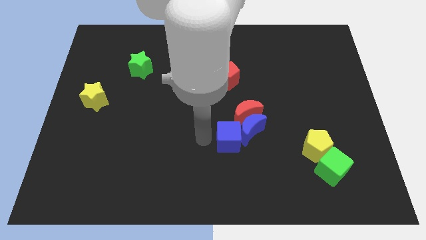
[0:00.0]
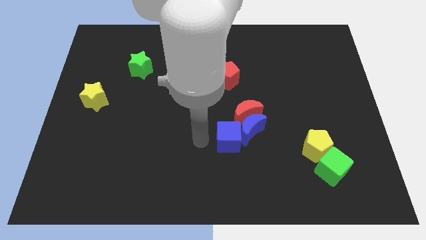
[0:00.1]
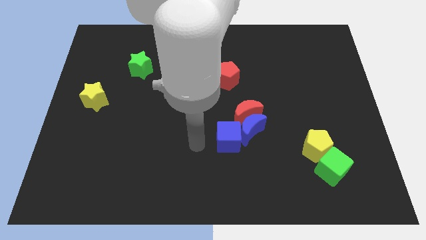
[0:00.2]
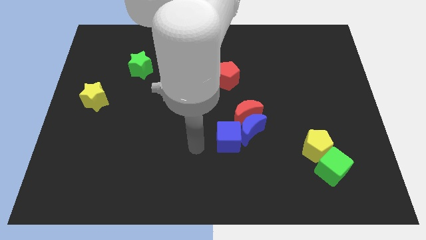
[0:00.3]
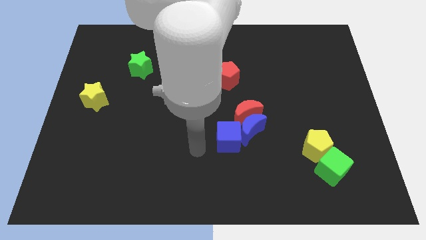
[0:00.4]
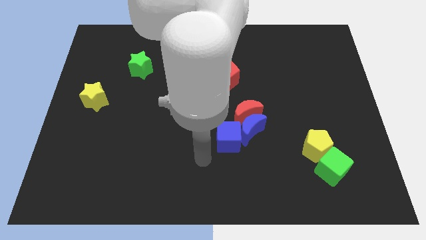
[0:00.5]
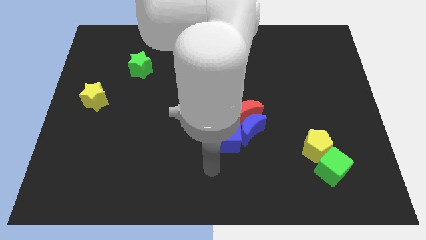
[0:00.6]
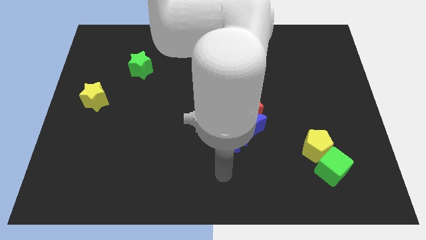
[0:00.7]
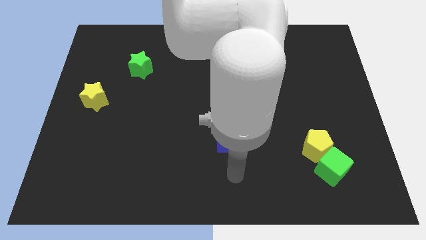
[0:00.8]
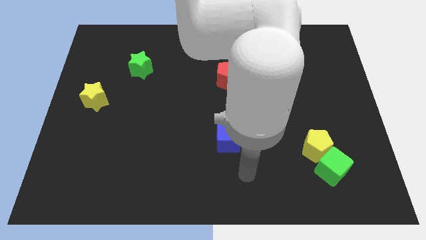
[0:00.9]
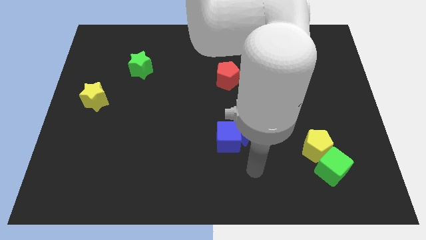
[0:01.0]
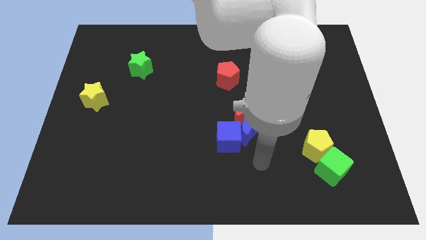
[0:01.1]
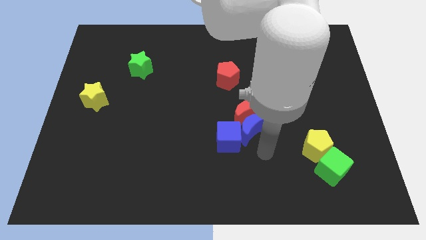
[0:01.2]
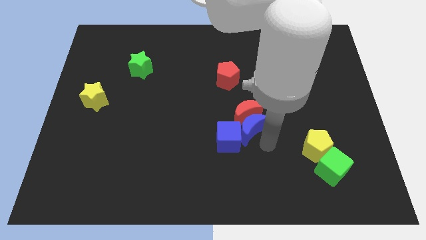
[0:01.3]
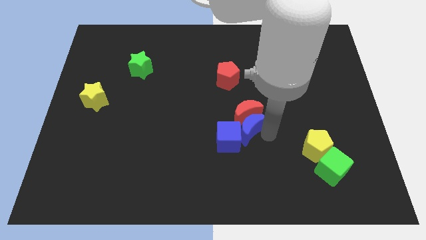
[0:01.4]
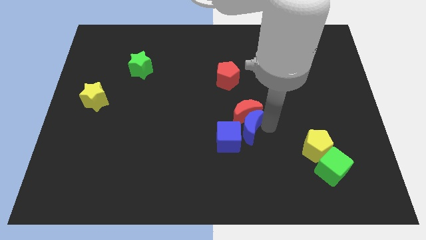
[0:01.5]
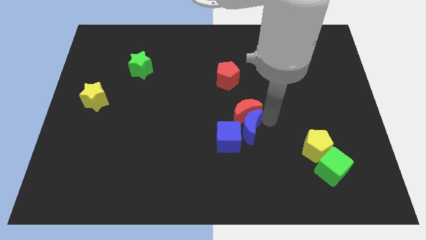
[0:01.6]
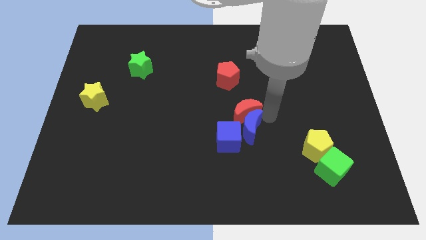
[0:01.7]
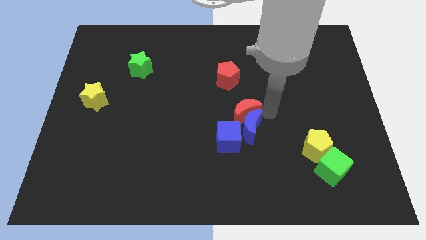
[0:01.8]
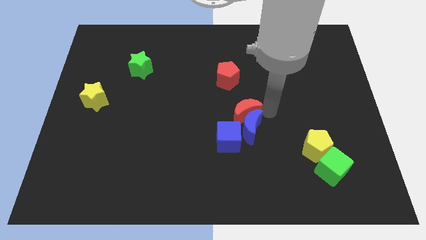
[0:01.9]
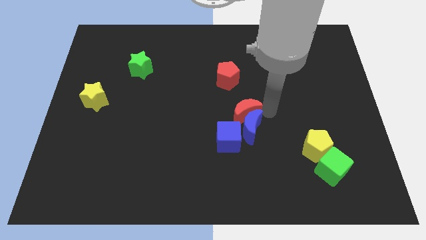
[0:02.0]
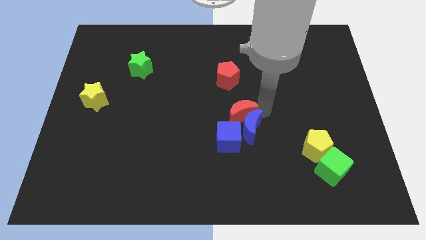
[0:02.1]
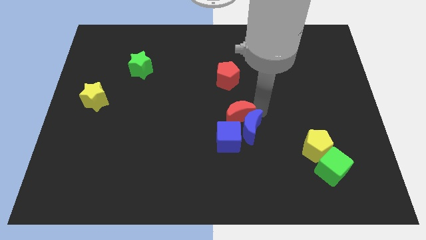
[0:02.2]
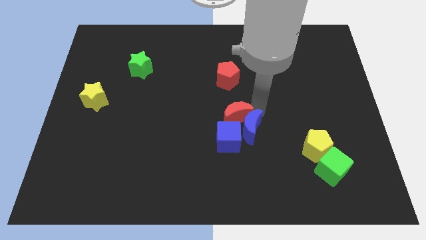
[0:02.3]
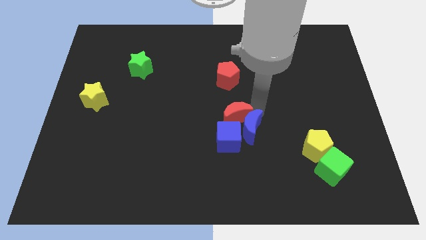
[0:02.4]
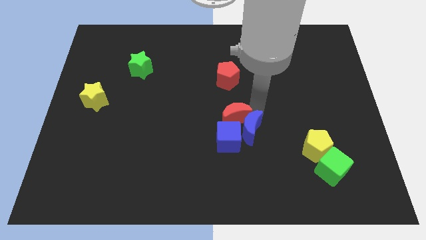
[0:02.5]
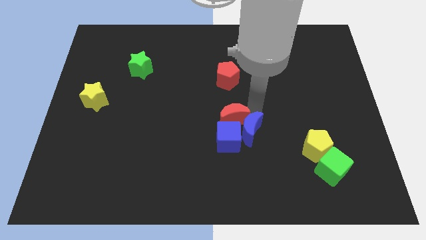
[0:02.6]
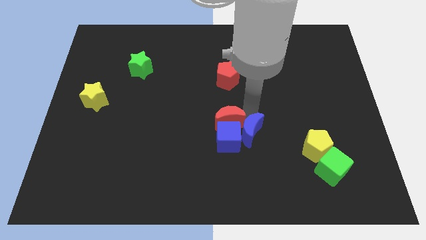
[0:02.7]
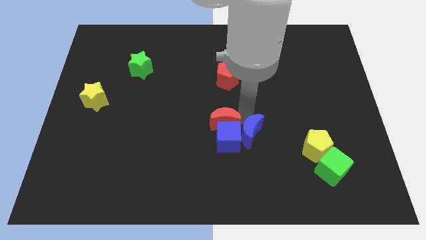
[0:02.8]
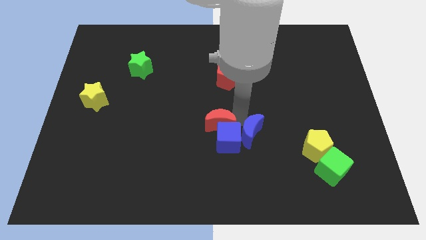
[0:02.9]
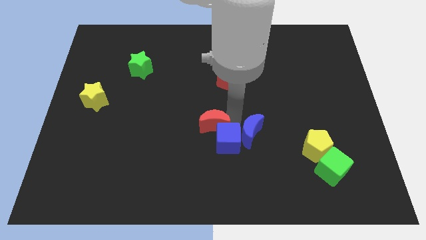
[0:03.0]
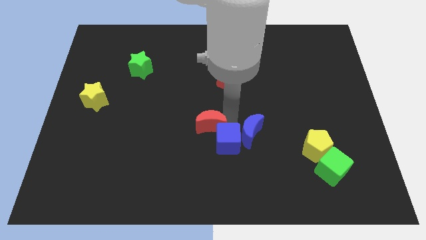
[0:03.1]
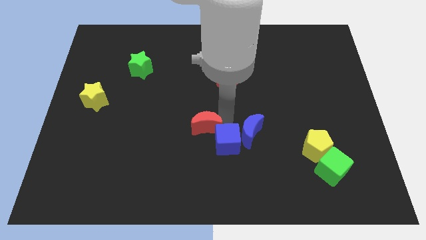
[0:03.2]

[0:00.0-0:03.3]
adjust the red crescent into the blue cube from the top

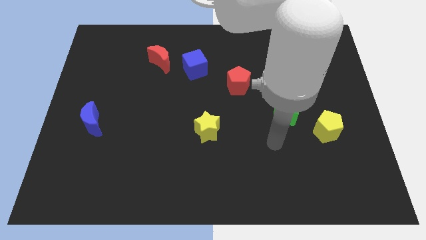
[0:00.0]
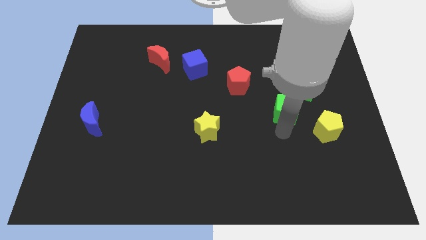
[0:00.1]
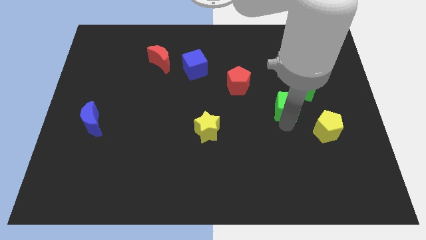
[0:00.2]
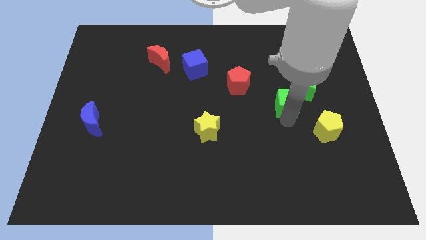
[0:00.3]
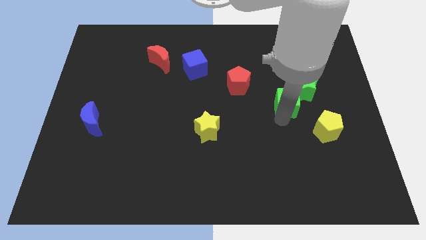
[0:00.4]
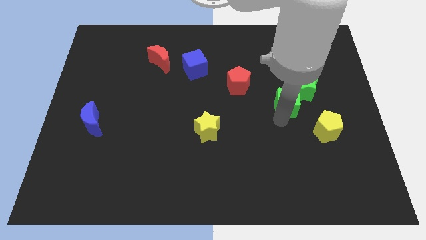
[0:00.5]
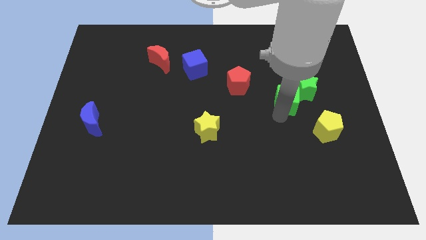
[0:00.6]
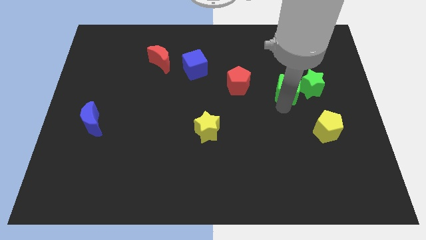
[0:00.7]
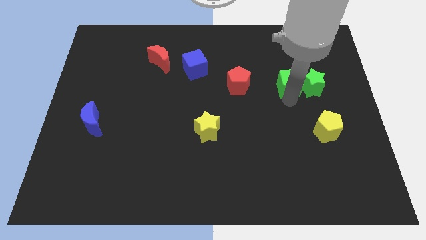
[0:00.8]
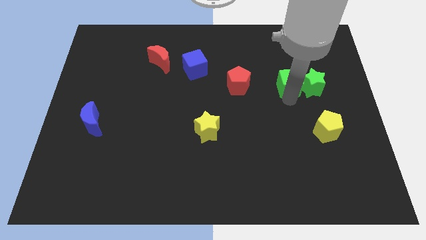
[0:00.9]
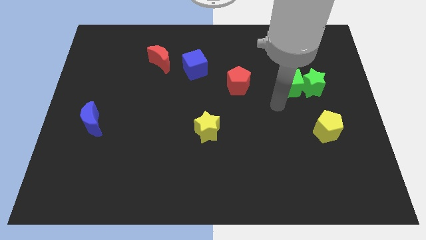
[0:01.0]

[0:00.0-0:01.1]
push the green cube to the left side of the green star

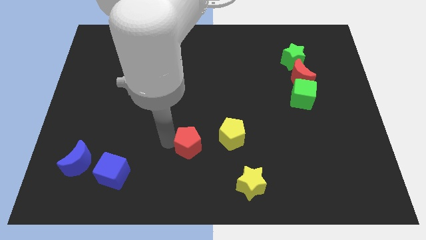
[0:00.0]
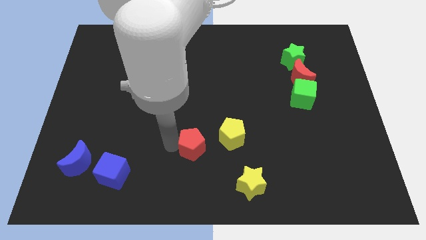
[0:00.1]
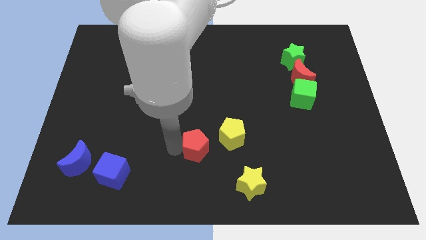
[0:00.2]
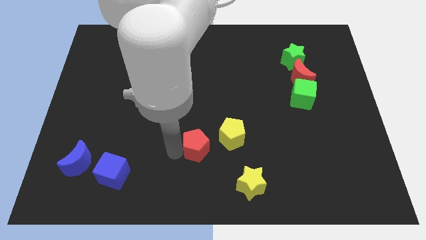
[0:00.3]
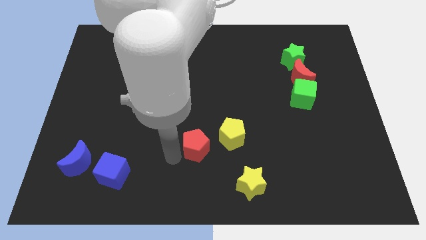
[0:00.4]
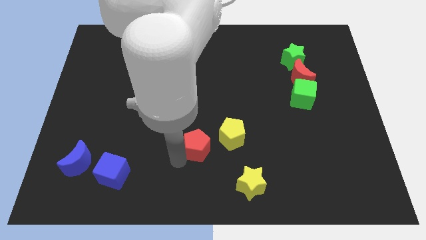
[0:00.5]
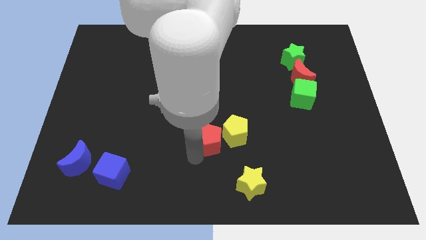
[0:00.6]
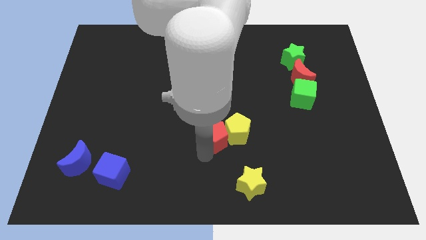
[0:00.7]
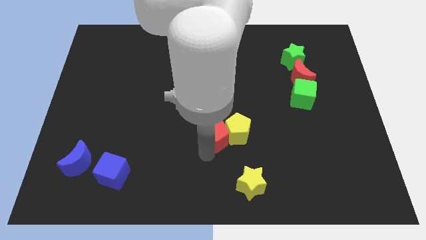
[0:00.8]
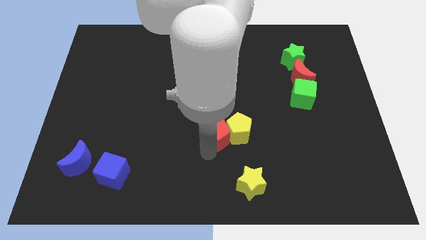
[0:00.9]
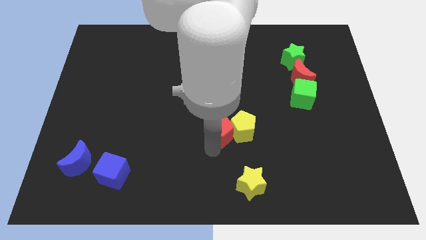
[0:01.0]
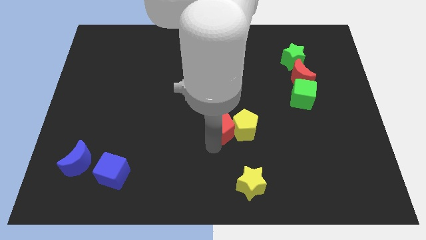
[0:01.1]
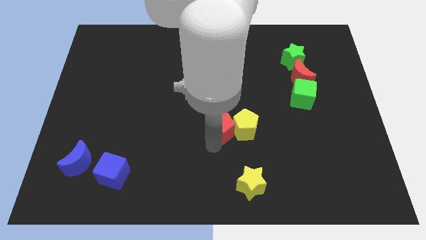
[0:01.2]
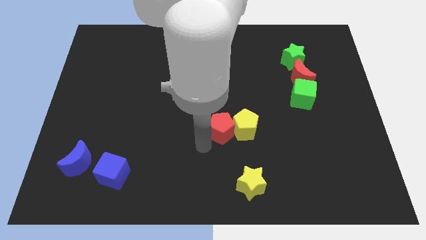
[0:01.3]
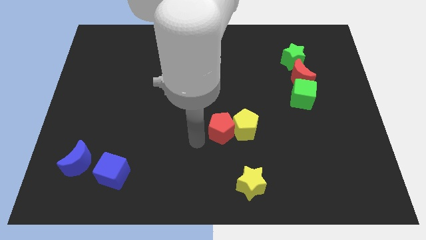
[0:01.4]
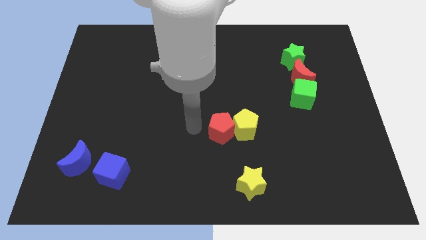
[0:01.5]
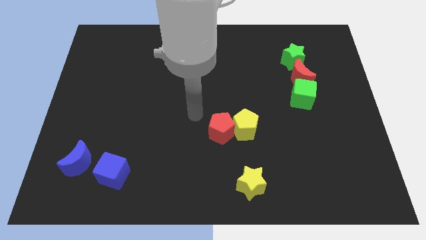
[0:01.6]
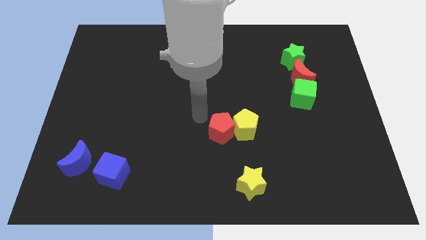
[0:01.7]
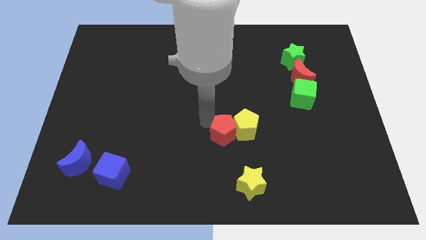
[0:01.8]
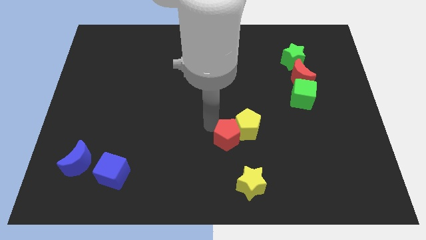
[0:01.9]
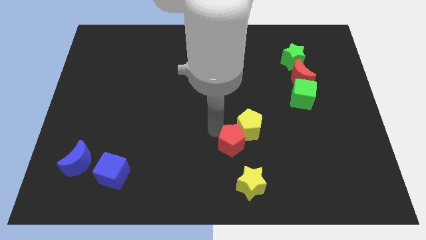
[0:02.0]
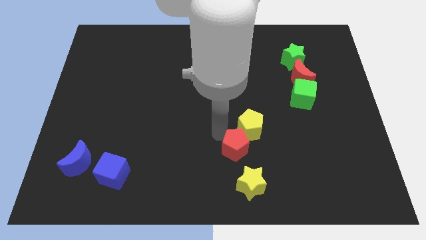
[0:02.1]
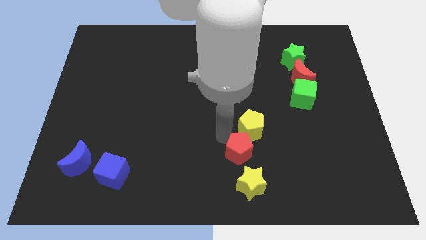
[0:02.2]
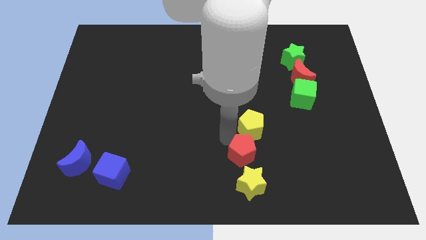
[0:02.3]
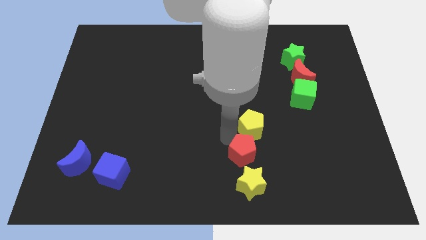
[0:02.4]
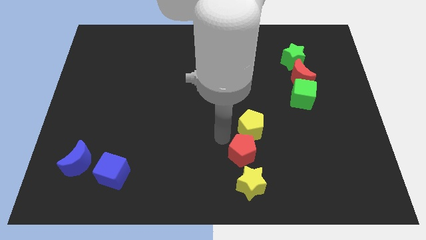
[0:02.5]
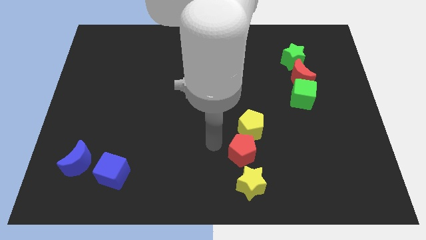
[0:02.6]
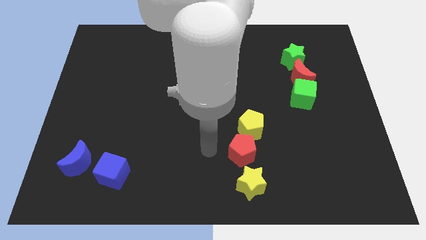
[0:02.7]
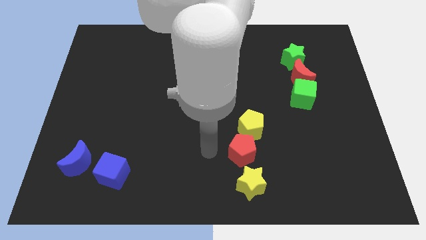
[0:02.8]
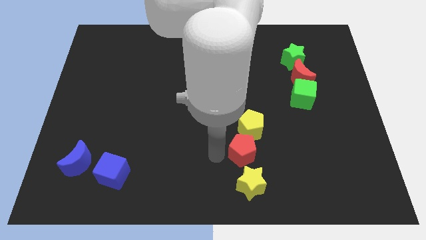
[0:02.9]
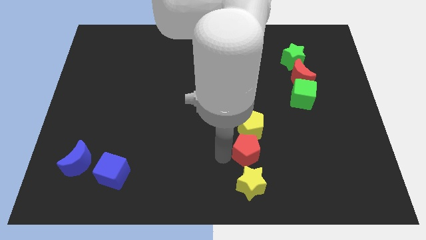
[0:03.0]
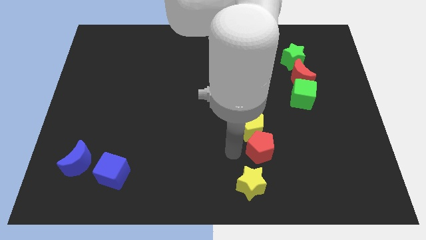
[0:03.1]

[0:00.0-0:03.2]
place the red pentagon below the yellow pentagon

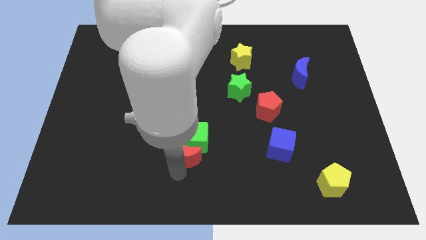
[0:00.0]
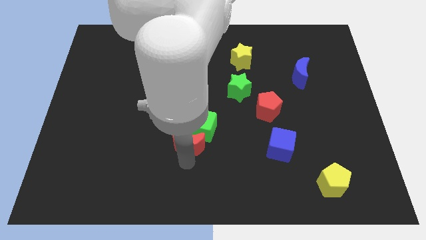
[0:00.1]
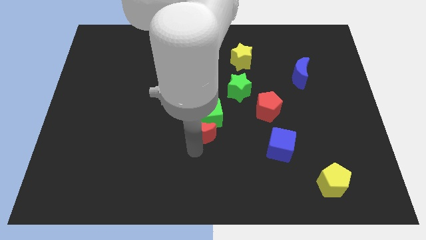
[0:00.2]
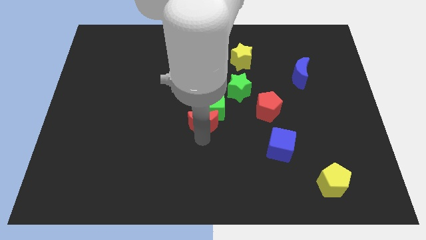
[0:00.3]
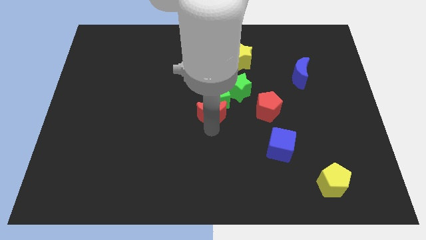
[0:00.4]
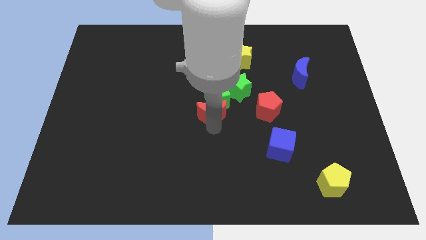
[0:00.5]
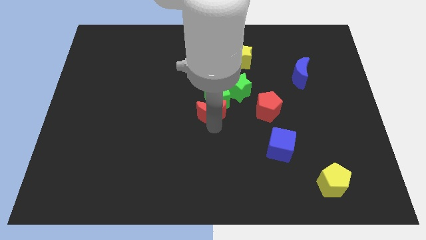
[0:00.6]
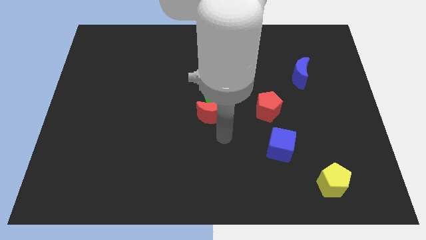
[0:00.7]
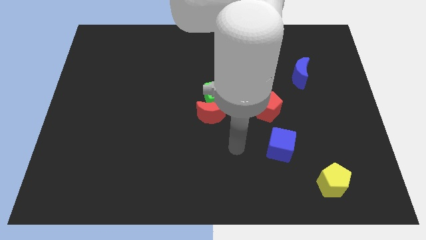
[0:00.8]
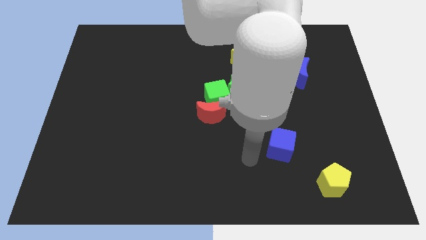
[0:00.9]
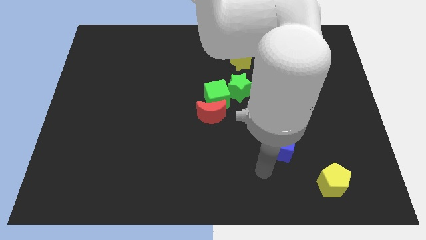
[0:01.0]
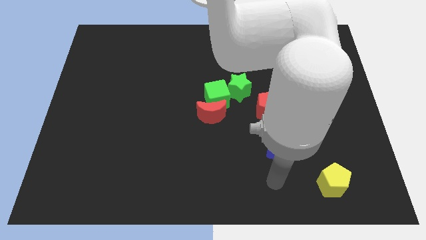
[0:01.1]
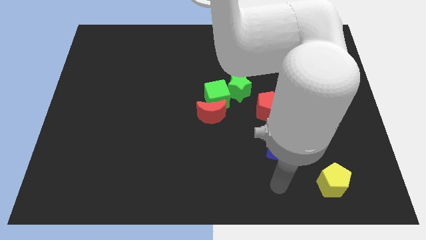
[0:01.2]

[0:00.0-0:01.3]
push the red crescent along with green cube close to the green star

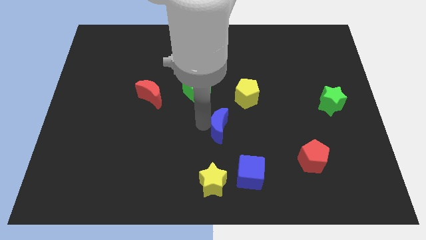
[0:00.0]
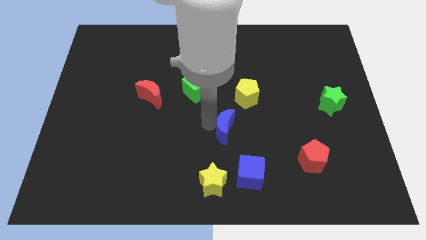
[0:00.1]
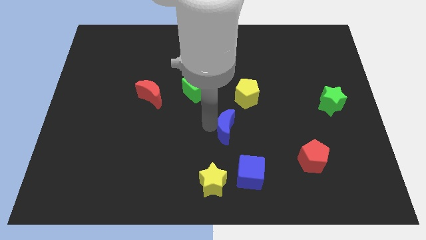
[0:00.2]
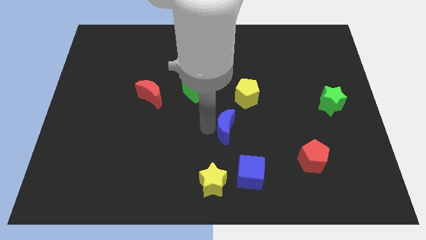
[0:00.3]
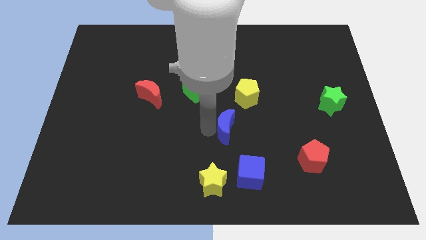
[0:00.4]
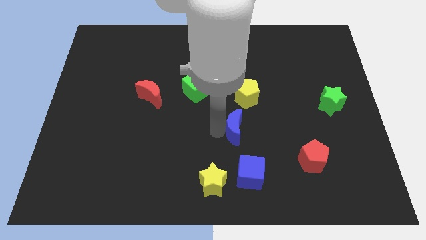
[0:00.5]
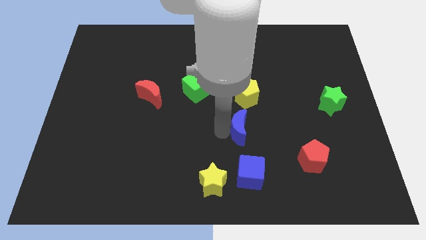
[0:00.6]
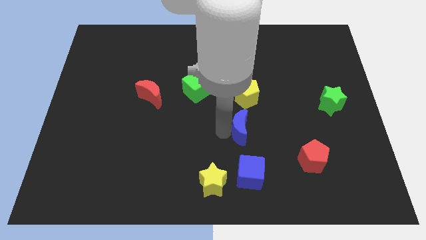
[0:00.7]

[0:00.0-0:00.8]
push the blue crescent to the bottom of the yellow pentagon
